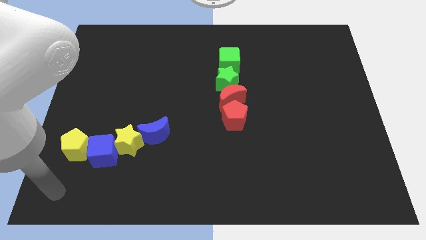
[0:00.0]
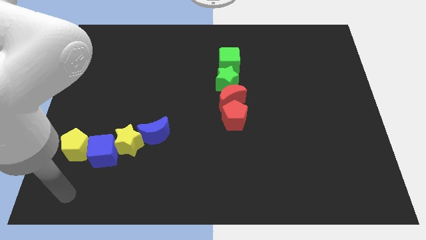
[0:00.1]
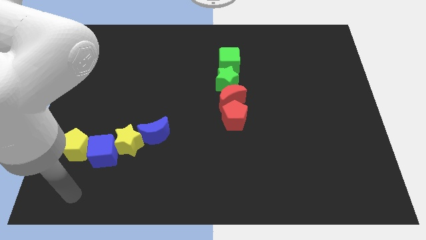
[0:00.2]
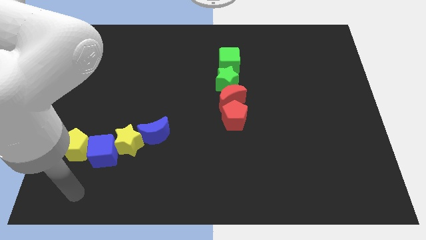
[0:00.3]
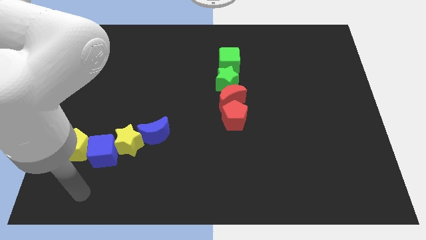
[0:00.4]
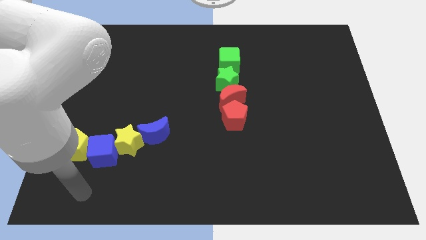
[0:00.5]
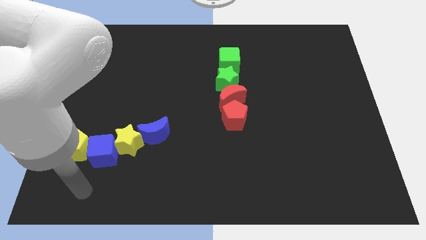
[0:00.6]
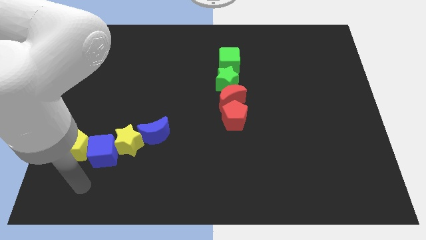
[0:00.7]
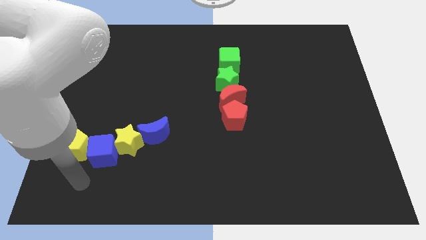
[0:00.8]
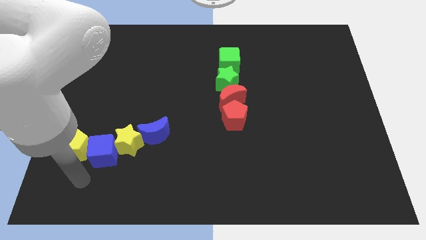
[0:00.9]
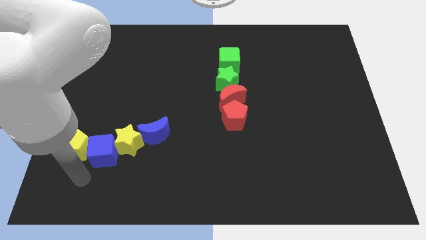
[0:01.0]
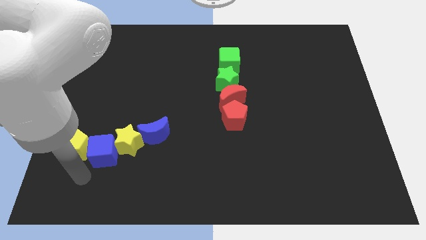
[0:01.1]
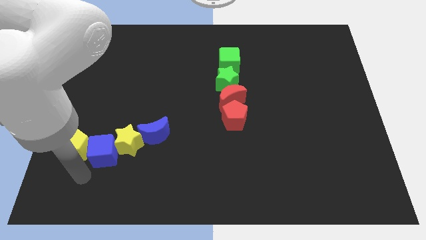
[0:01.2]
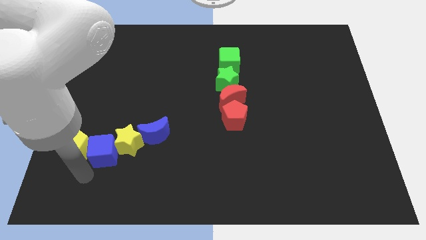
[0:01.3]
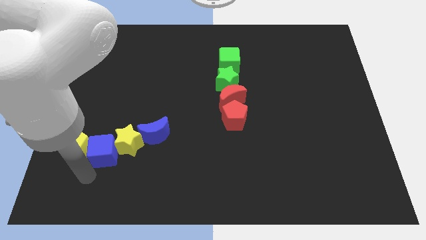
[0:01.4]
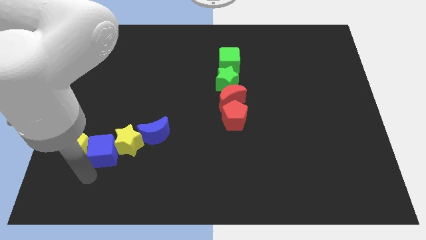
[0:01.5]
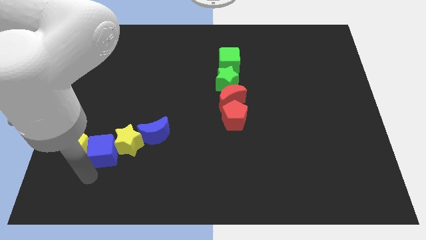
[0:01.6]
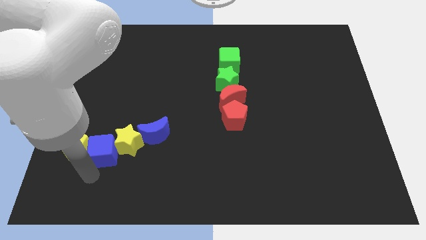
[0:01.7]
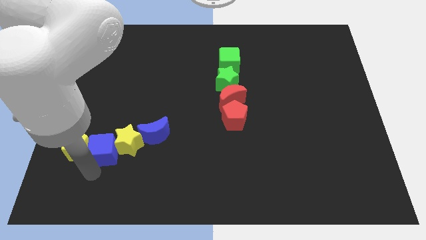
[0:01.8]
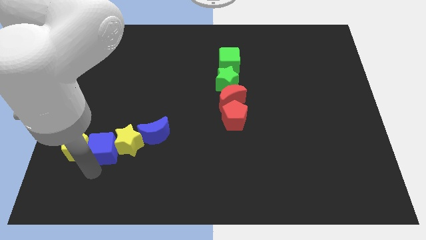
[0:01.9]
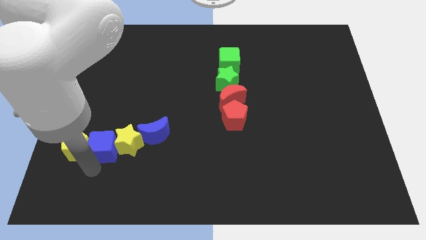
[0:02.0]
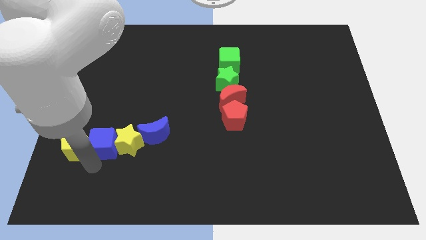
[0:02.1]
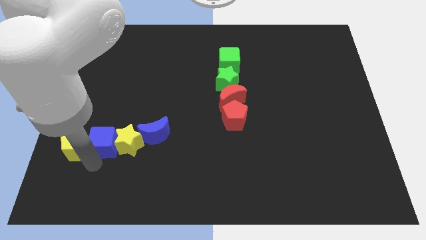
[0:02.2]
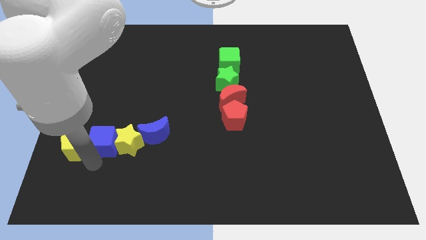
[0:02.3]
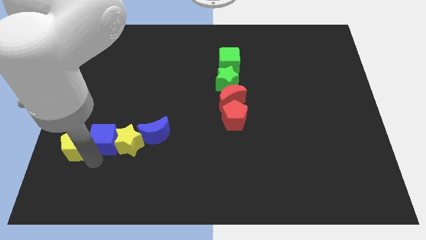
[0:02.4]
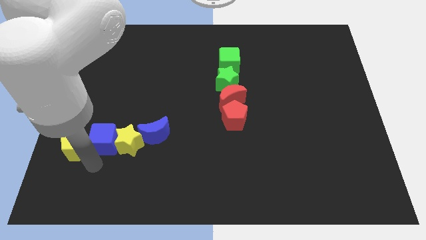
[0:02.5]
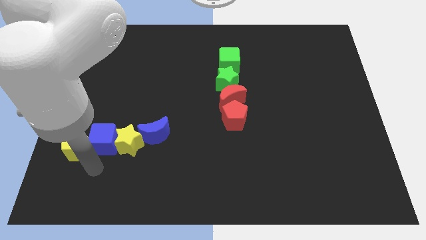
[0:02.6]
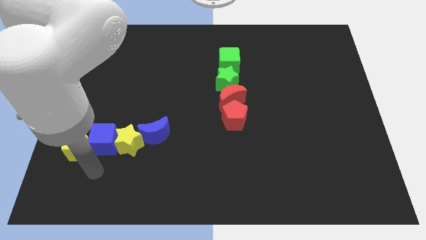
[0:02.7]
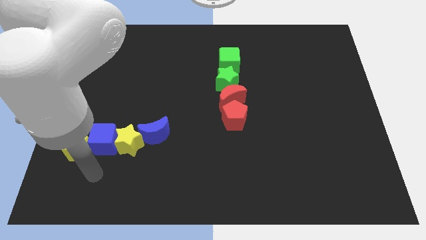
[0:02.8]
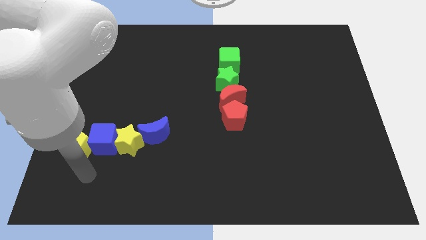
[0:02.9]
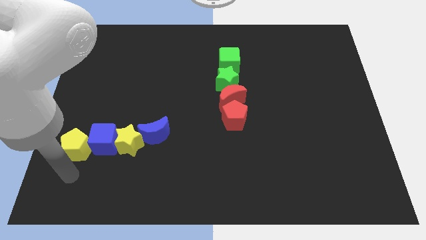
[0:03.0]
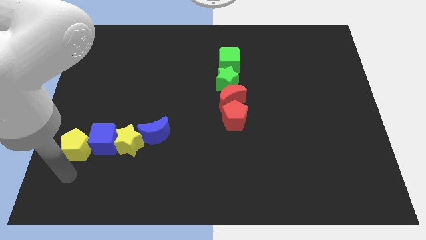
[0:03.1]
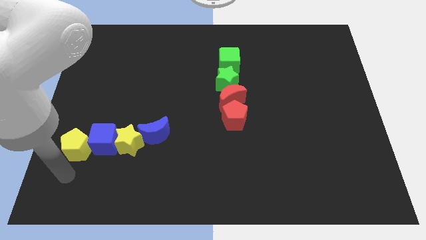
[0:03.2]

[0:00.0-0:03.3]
move the blue cube slightly to the up

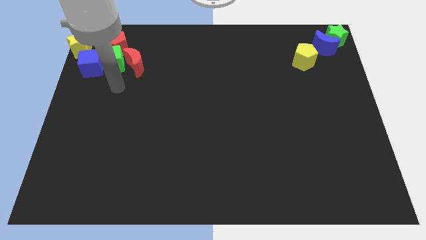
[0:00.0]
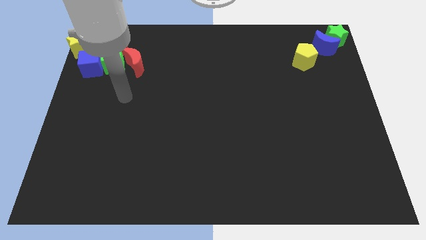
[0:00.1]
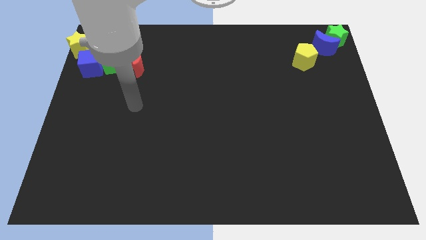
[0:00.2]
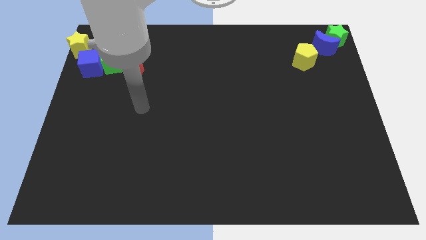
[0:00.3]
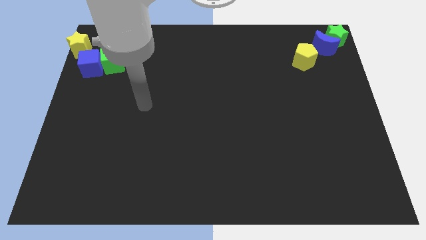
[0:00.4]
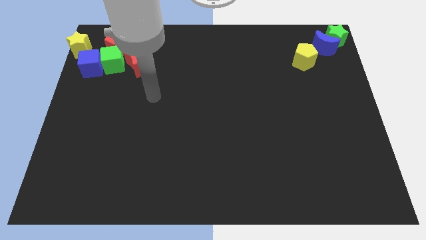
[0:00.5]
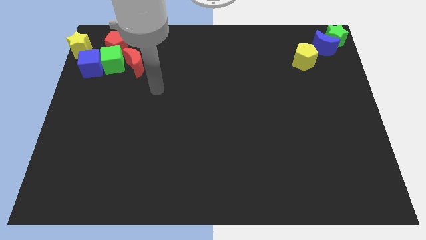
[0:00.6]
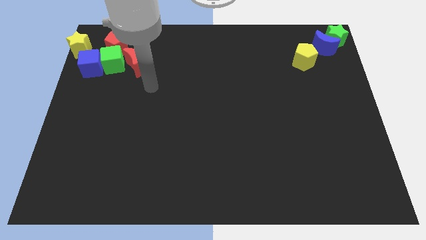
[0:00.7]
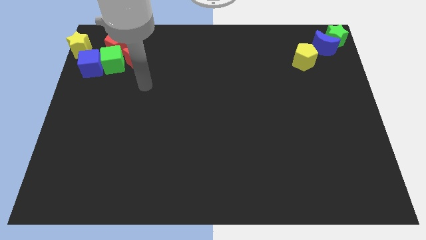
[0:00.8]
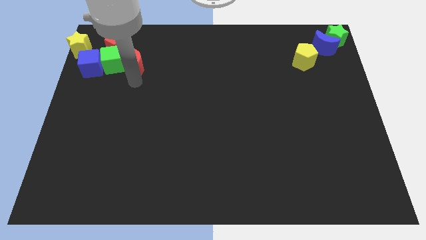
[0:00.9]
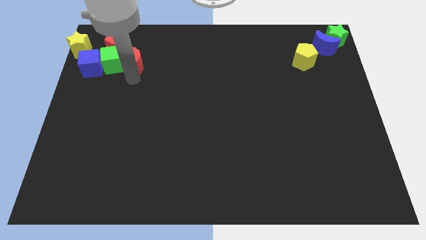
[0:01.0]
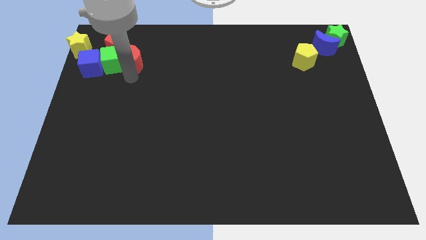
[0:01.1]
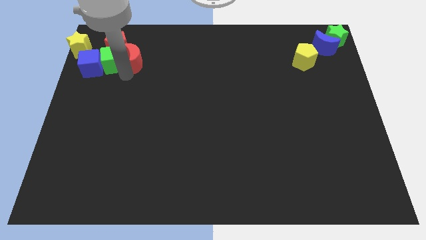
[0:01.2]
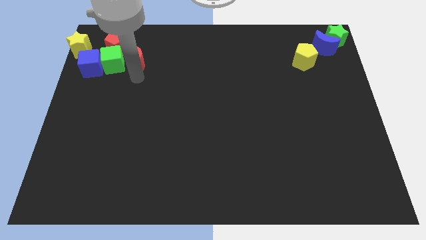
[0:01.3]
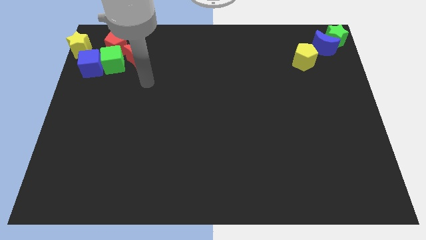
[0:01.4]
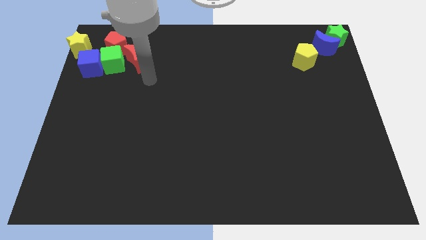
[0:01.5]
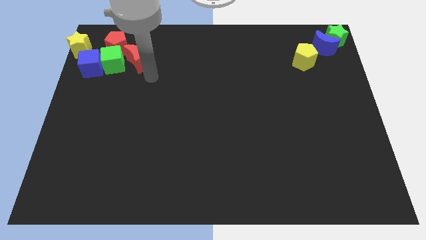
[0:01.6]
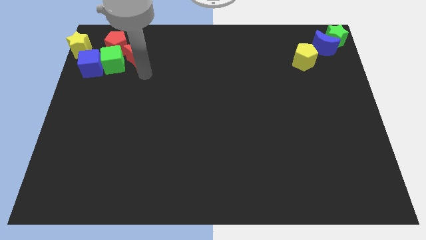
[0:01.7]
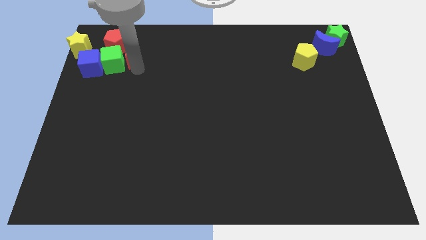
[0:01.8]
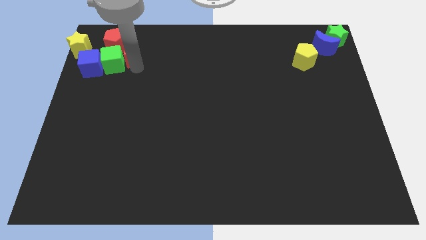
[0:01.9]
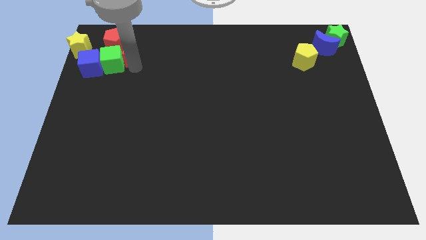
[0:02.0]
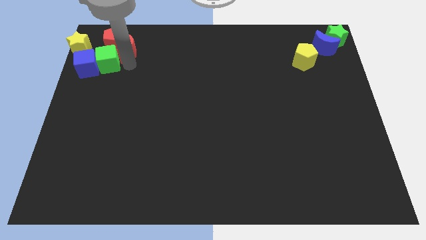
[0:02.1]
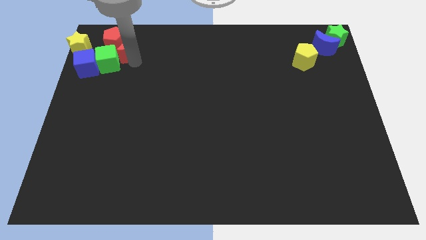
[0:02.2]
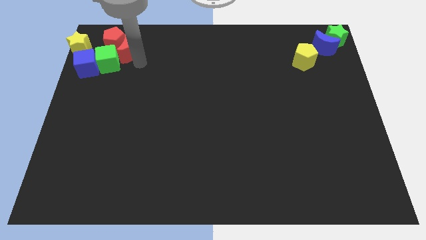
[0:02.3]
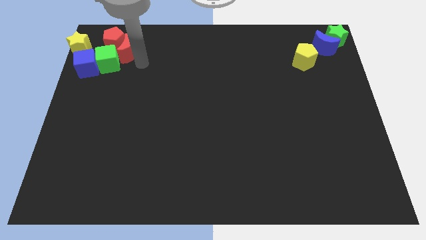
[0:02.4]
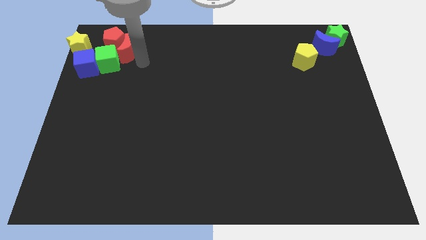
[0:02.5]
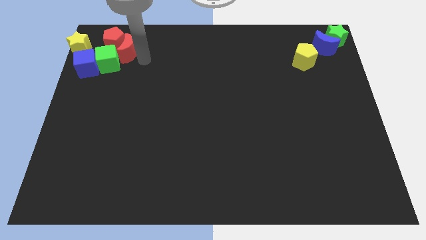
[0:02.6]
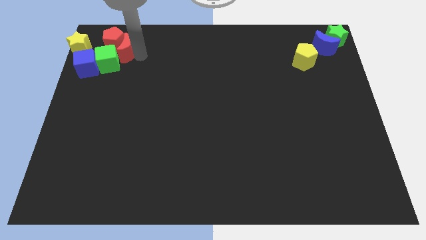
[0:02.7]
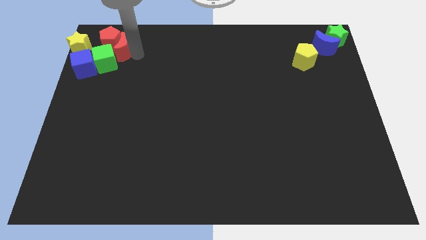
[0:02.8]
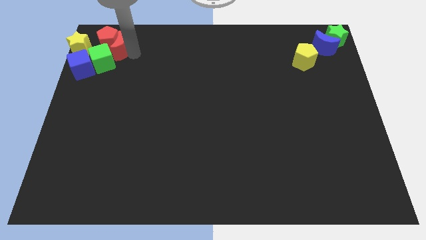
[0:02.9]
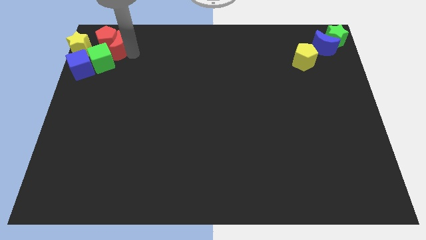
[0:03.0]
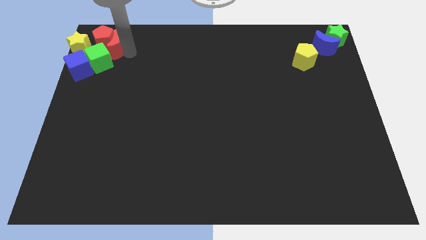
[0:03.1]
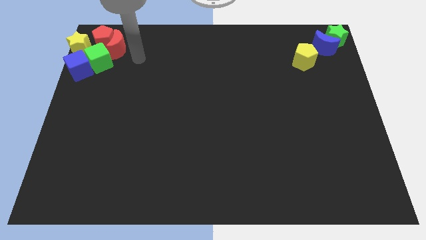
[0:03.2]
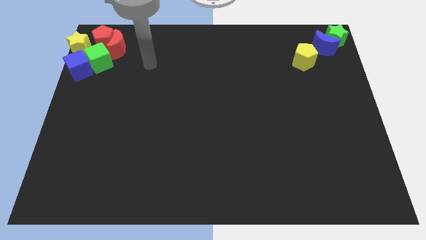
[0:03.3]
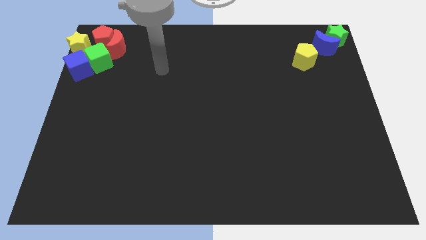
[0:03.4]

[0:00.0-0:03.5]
push the group of red blocks into the group of blocks

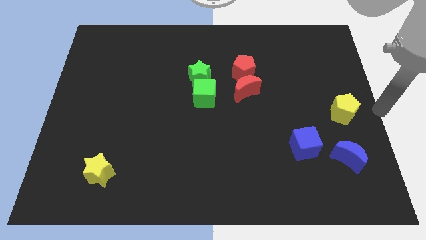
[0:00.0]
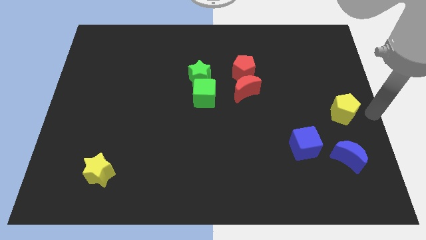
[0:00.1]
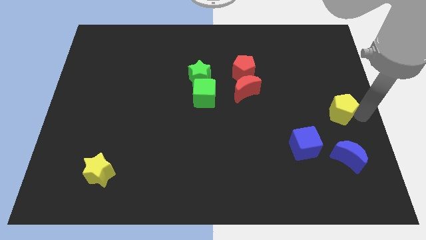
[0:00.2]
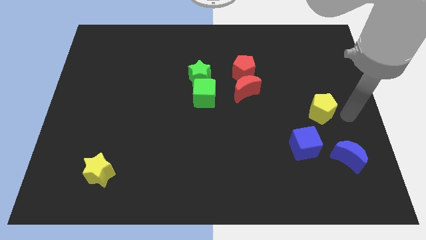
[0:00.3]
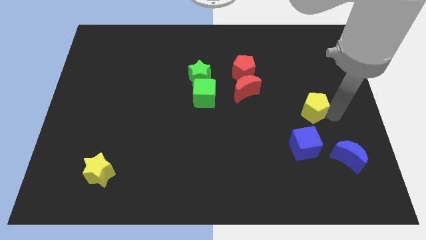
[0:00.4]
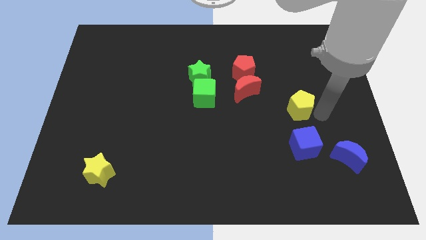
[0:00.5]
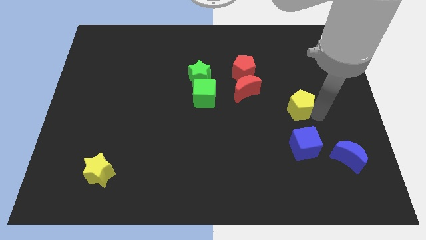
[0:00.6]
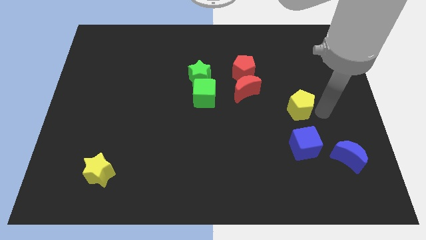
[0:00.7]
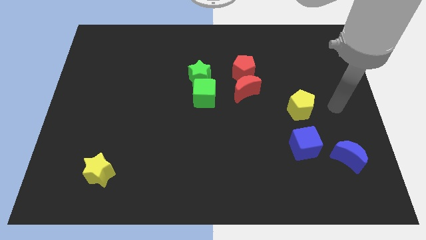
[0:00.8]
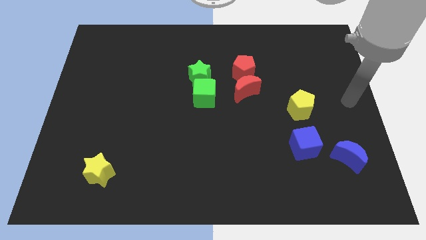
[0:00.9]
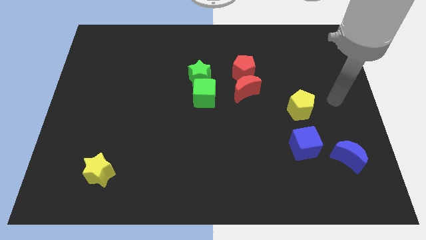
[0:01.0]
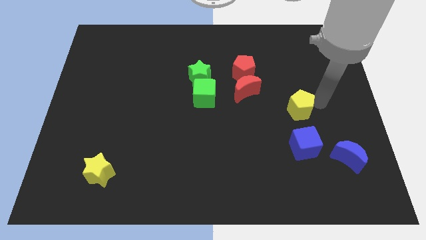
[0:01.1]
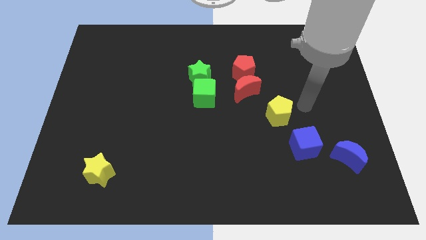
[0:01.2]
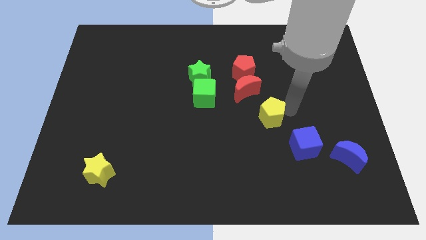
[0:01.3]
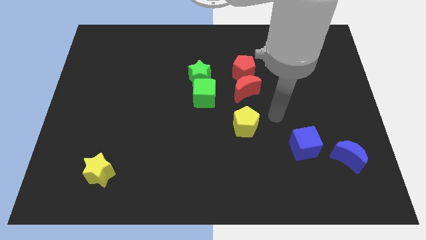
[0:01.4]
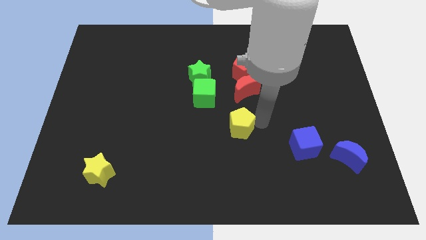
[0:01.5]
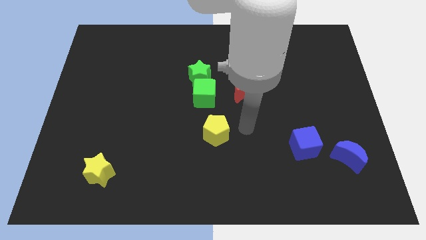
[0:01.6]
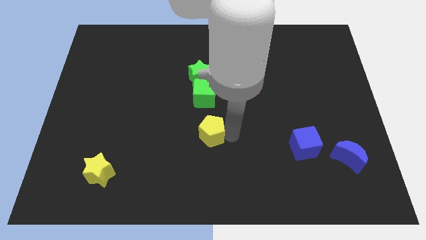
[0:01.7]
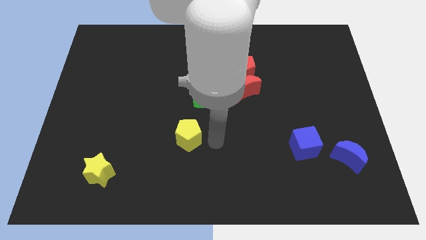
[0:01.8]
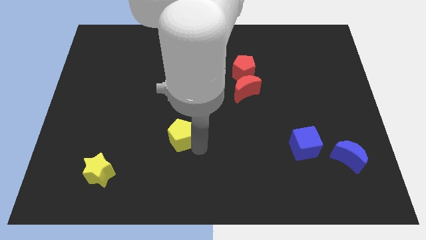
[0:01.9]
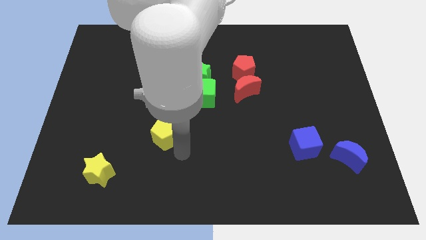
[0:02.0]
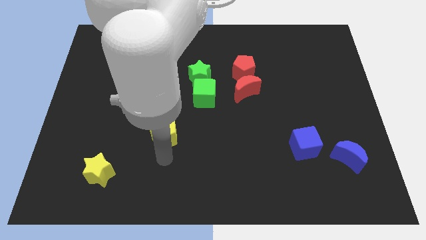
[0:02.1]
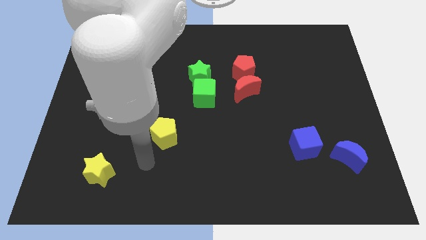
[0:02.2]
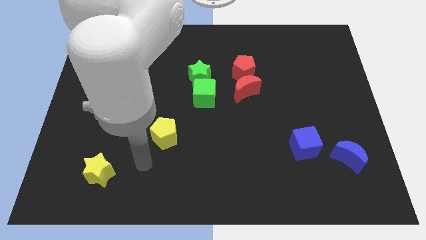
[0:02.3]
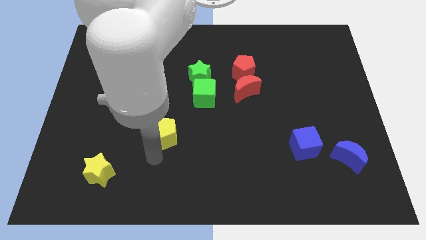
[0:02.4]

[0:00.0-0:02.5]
push yellow pentagon in between yellow star and green cube
